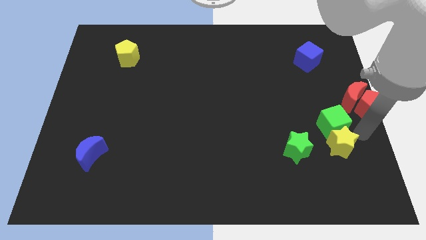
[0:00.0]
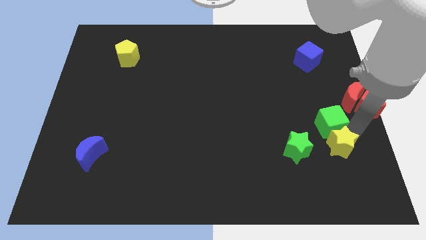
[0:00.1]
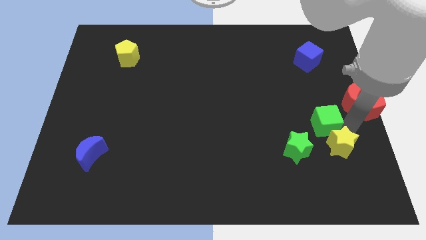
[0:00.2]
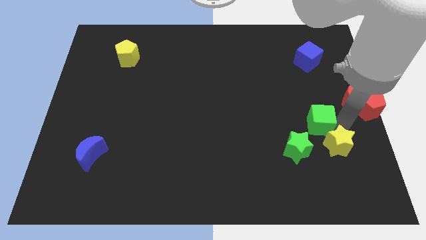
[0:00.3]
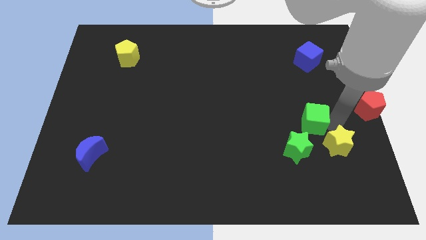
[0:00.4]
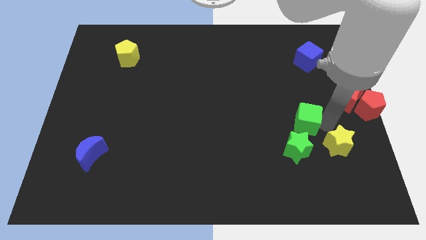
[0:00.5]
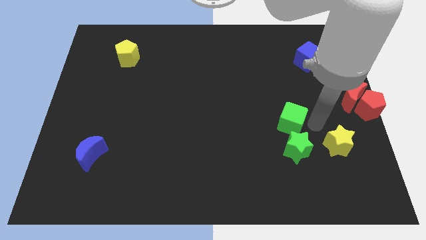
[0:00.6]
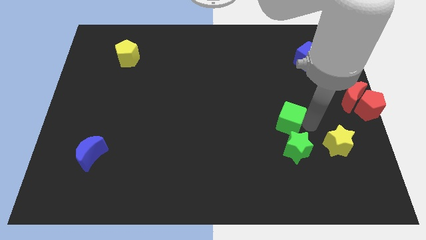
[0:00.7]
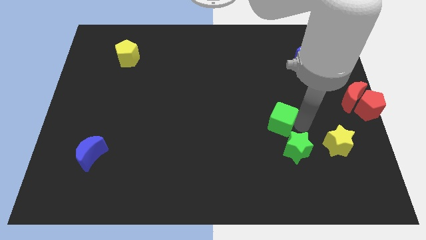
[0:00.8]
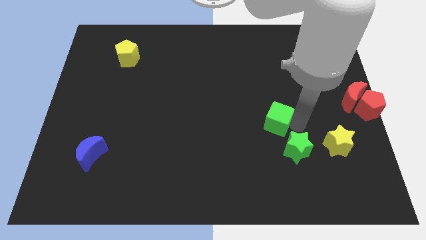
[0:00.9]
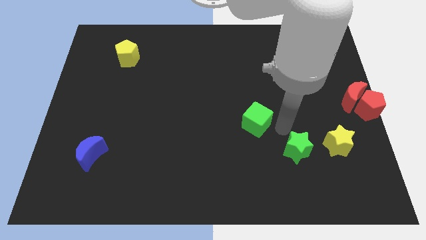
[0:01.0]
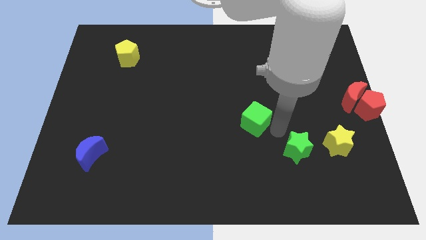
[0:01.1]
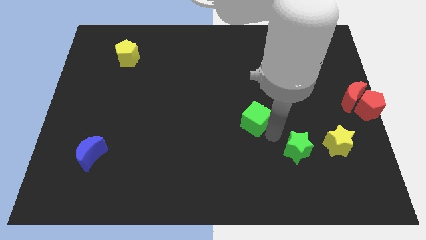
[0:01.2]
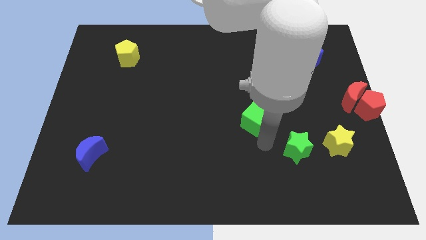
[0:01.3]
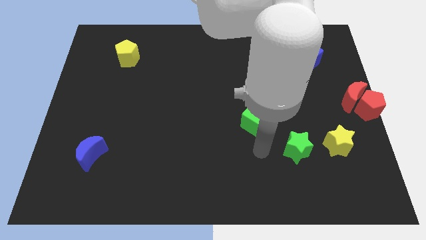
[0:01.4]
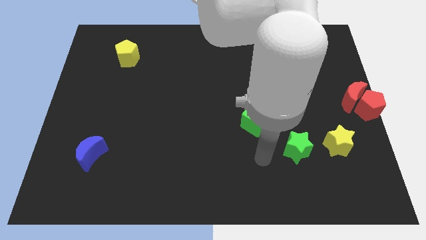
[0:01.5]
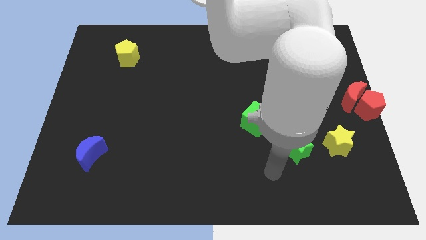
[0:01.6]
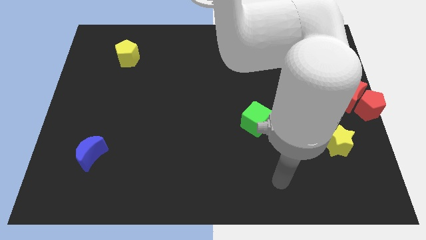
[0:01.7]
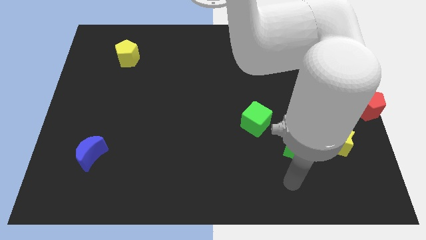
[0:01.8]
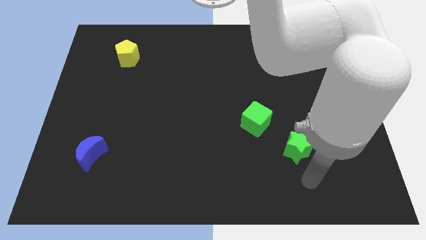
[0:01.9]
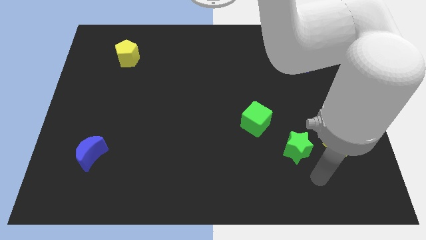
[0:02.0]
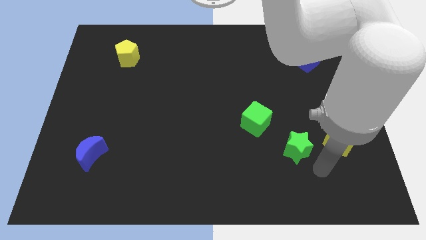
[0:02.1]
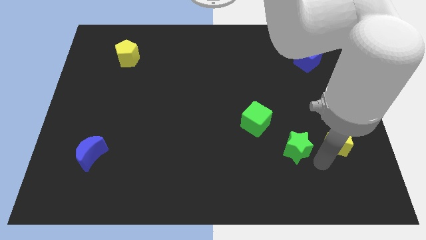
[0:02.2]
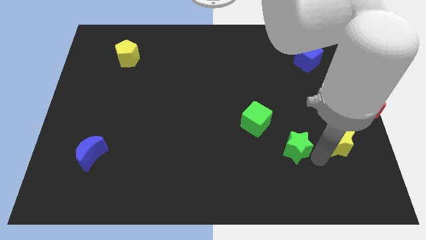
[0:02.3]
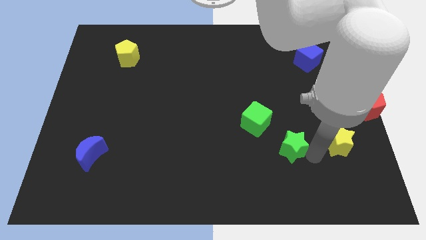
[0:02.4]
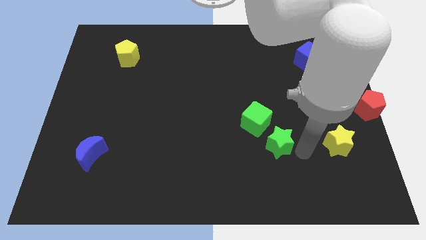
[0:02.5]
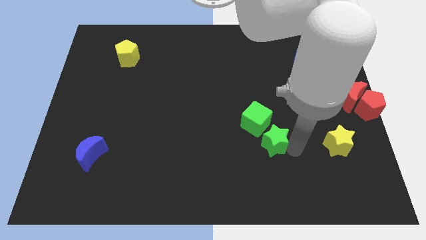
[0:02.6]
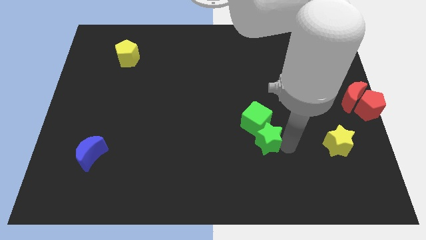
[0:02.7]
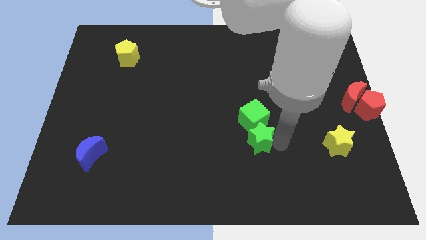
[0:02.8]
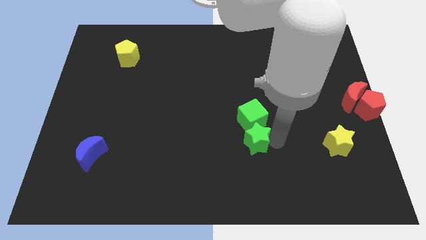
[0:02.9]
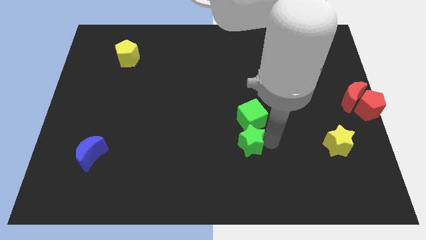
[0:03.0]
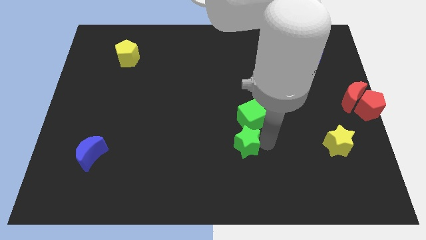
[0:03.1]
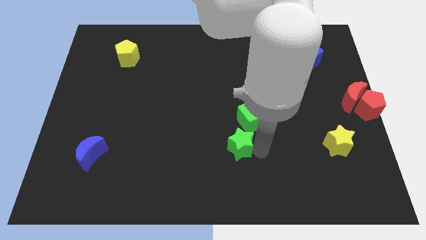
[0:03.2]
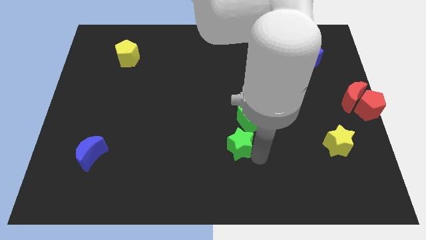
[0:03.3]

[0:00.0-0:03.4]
separate the green cube from the yellow star

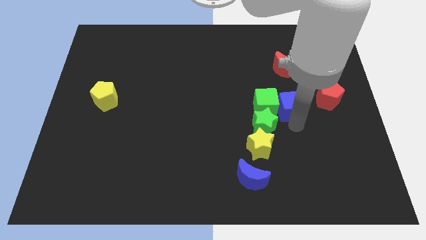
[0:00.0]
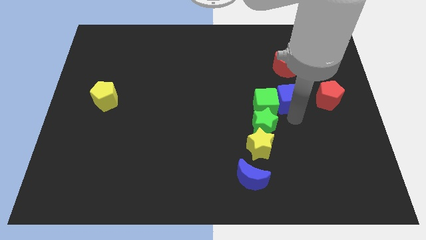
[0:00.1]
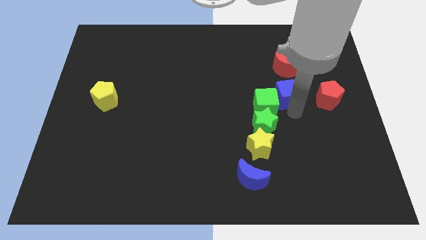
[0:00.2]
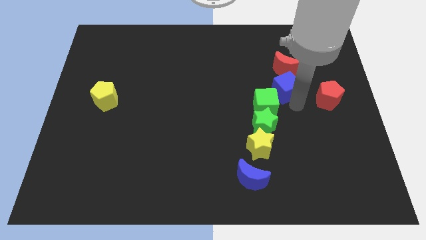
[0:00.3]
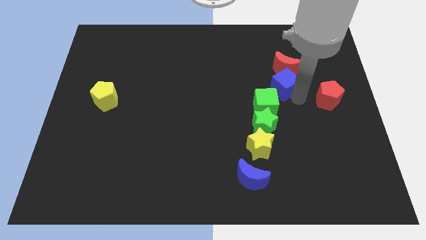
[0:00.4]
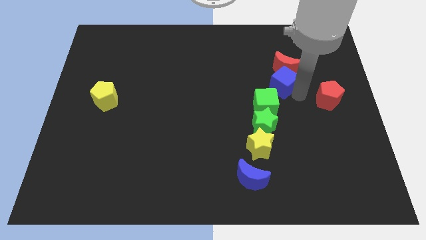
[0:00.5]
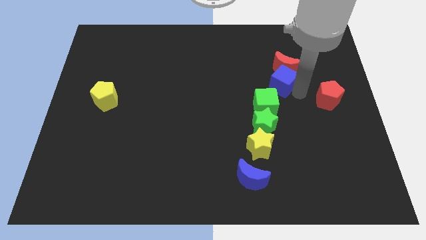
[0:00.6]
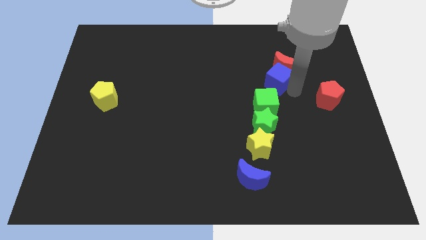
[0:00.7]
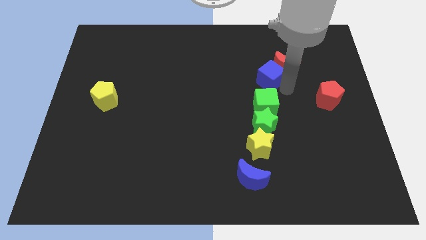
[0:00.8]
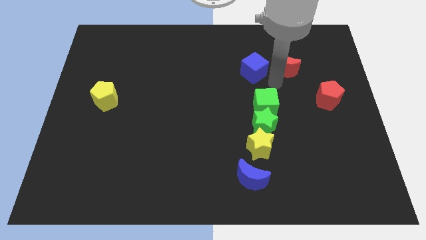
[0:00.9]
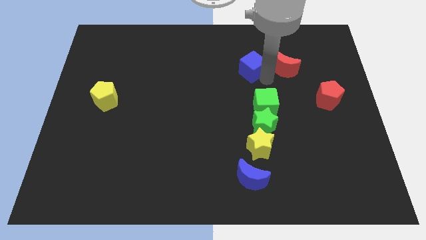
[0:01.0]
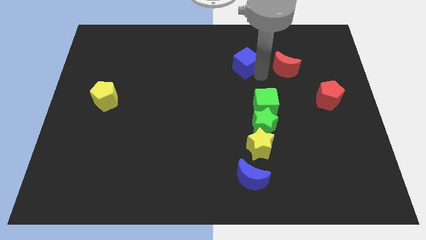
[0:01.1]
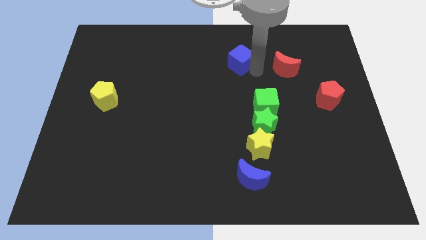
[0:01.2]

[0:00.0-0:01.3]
move blue cube diagonally above green cube

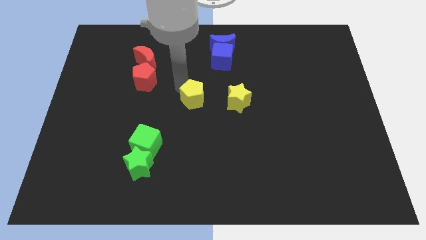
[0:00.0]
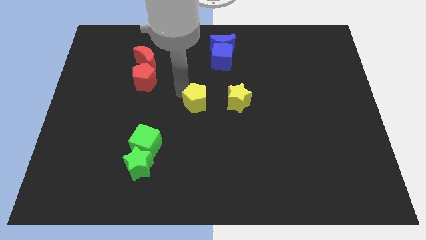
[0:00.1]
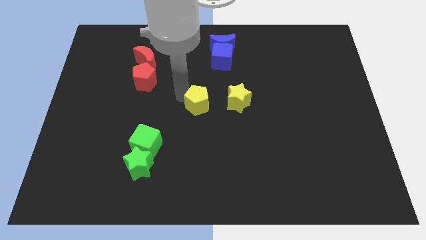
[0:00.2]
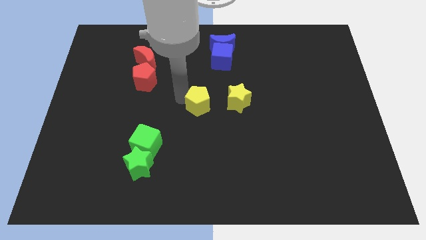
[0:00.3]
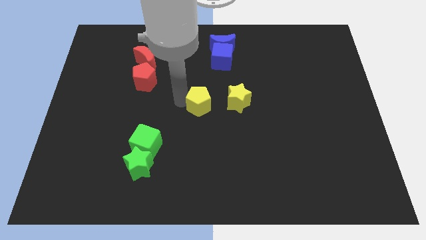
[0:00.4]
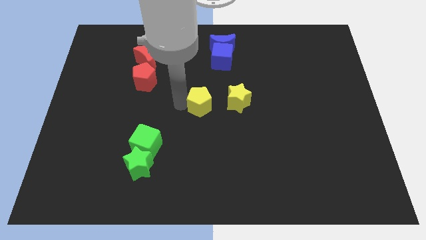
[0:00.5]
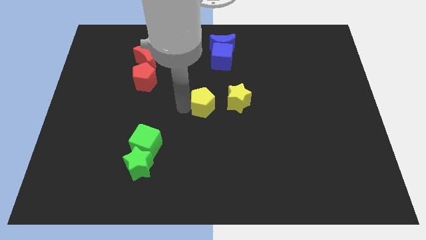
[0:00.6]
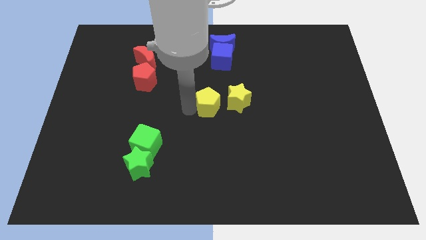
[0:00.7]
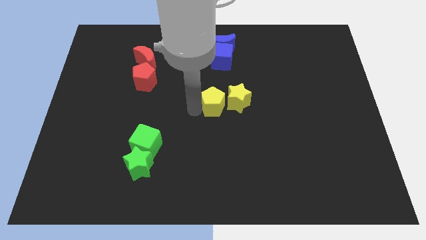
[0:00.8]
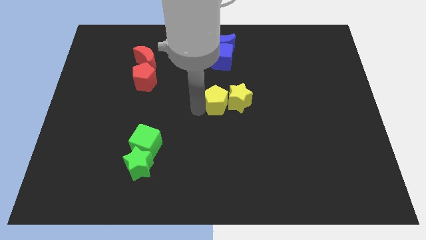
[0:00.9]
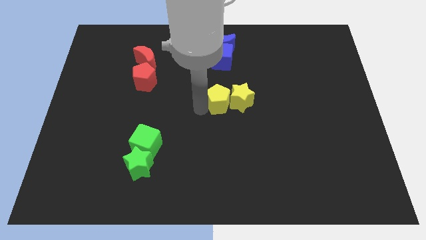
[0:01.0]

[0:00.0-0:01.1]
push the yellow pentagon to left side of the yellow star

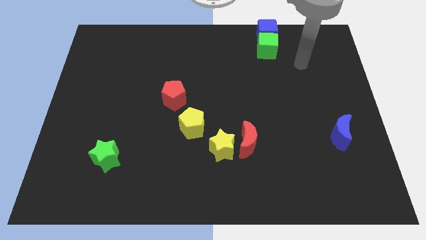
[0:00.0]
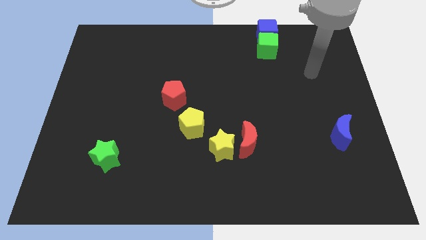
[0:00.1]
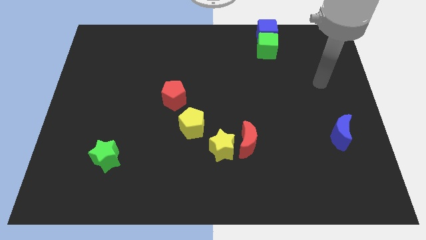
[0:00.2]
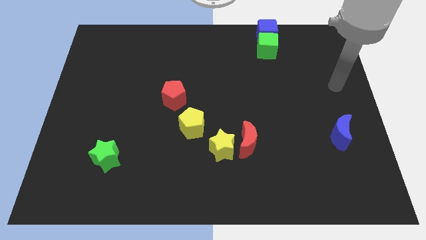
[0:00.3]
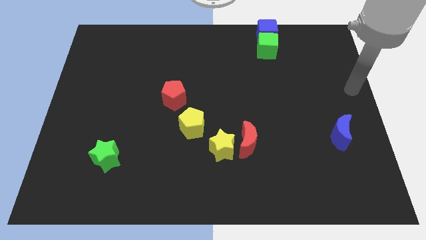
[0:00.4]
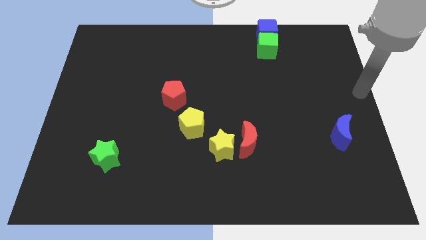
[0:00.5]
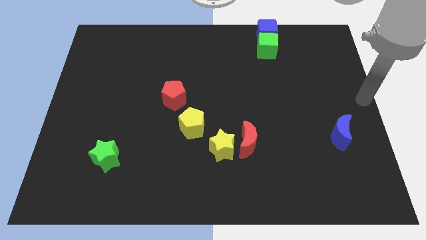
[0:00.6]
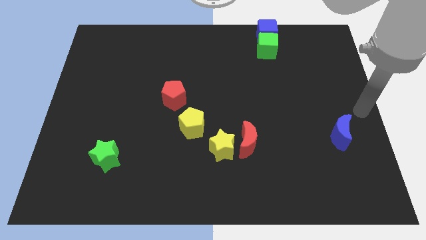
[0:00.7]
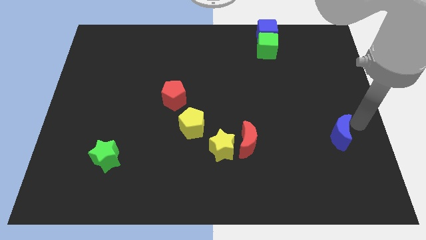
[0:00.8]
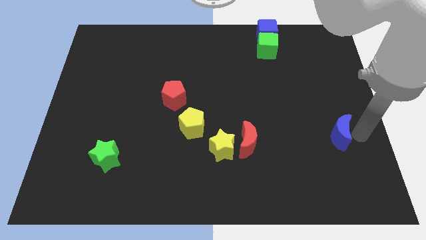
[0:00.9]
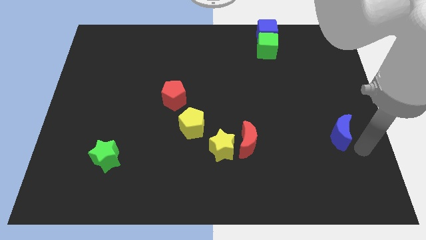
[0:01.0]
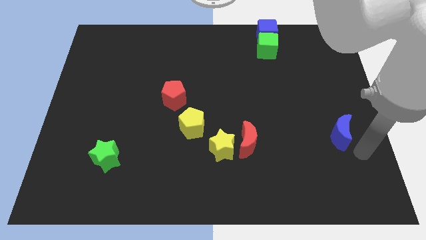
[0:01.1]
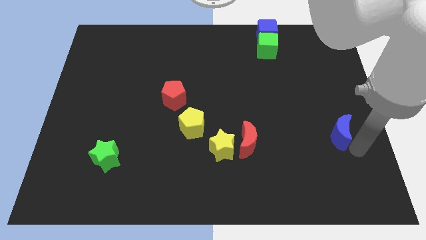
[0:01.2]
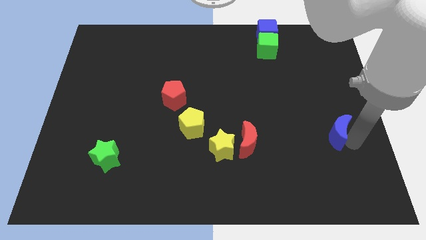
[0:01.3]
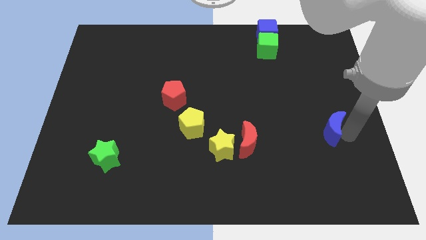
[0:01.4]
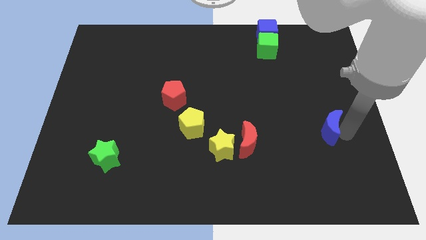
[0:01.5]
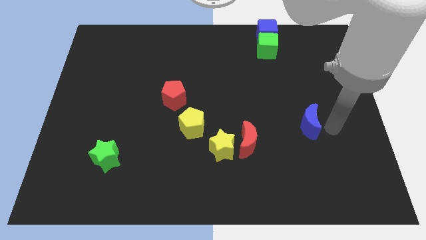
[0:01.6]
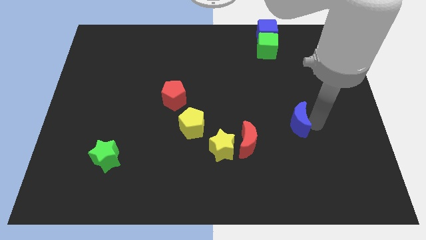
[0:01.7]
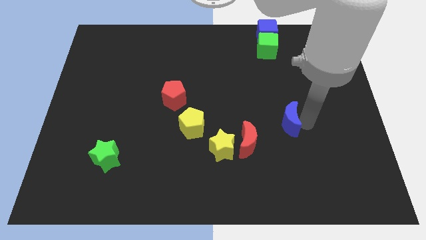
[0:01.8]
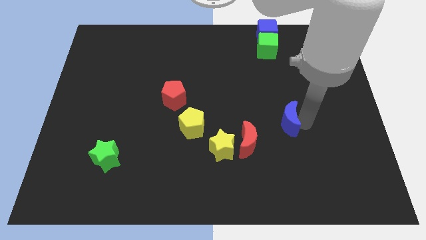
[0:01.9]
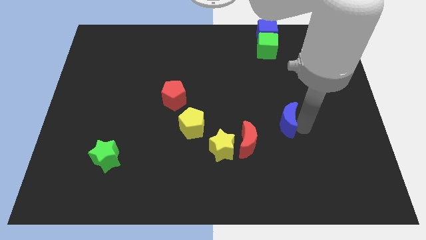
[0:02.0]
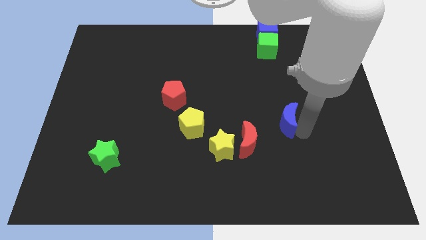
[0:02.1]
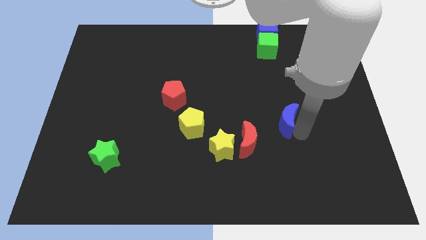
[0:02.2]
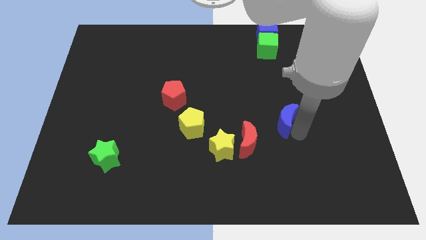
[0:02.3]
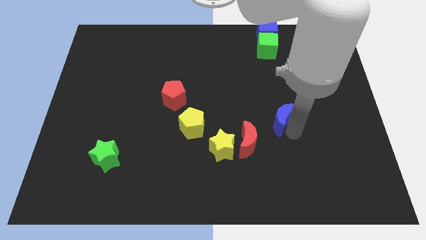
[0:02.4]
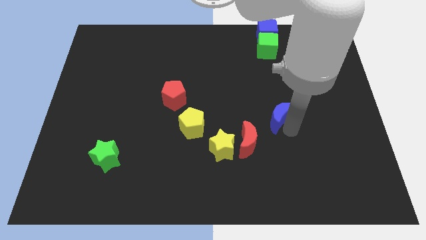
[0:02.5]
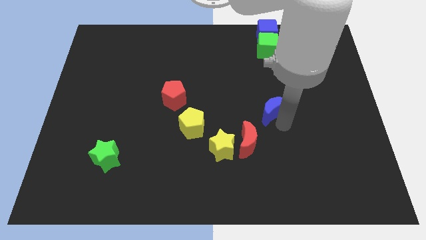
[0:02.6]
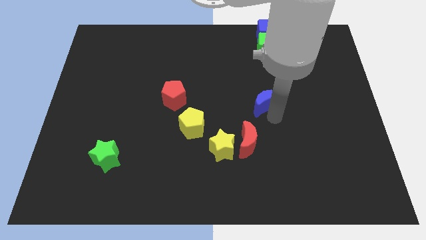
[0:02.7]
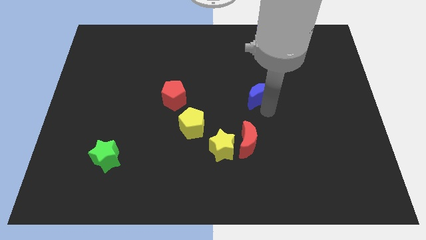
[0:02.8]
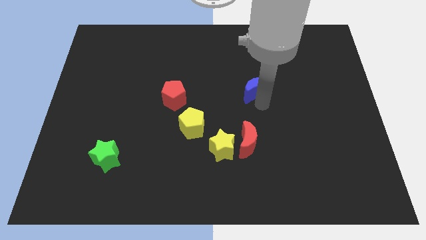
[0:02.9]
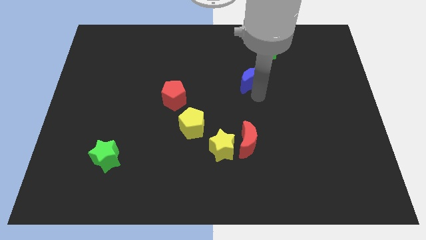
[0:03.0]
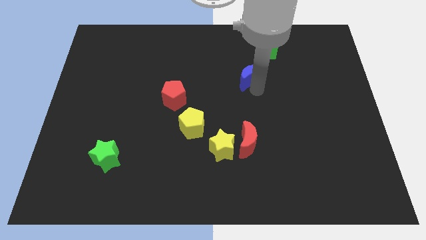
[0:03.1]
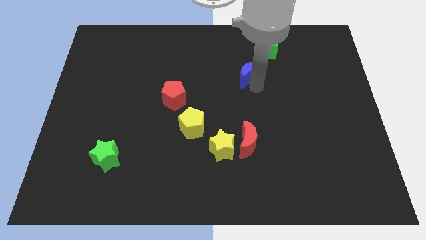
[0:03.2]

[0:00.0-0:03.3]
move the blue crescent to the top of the red crescent
